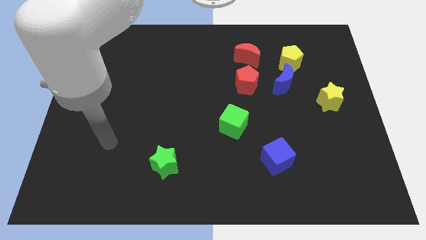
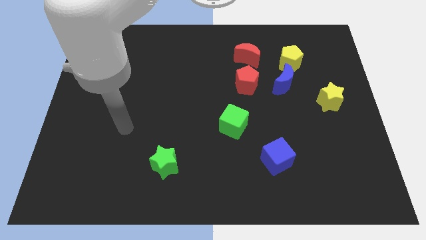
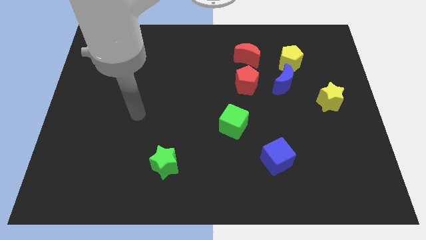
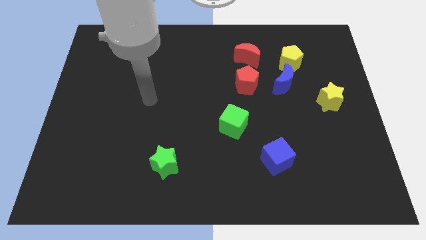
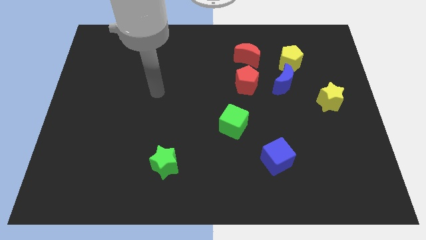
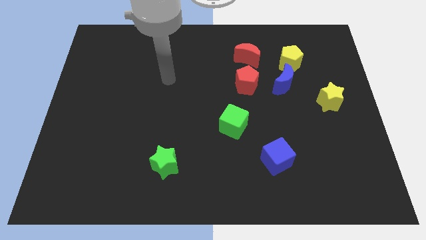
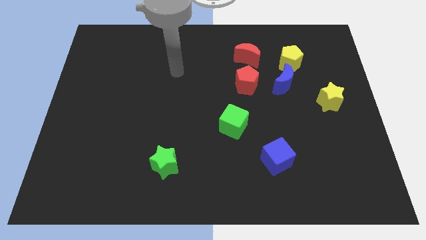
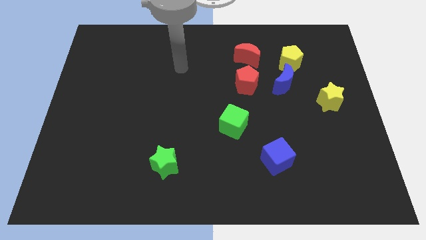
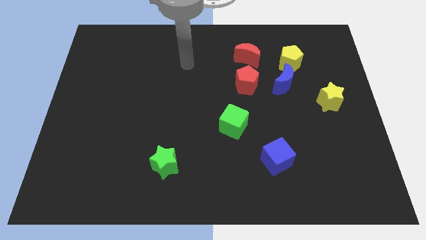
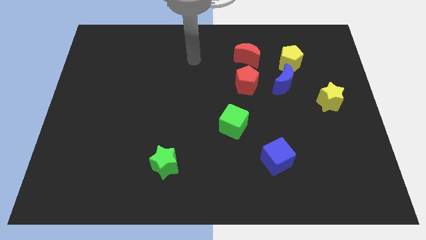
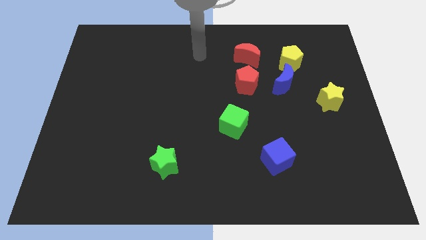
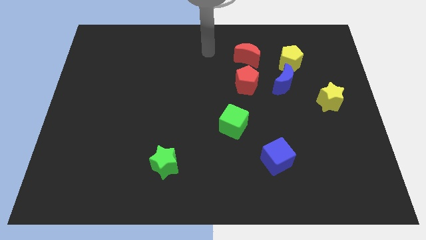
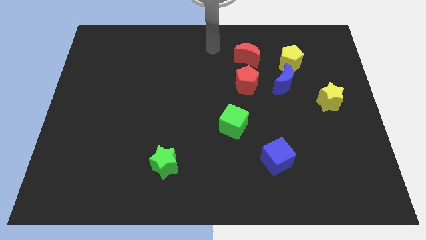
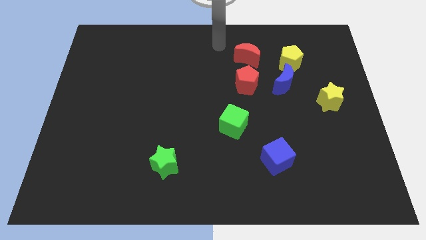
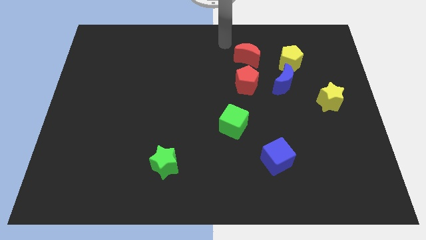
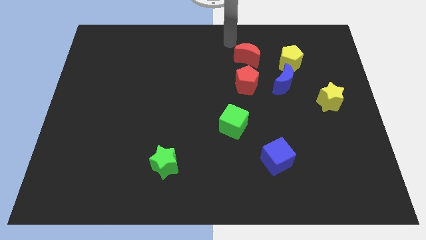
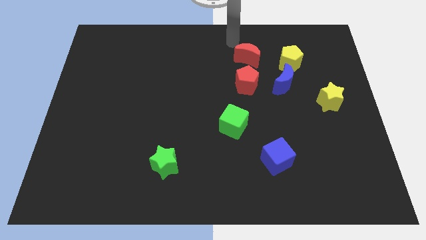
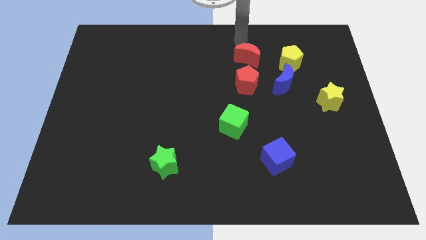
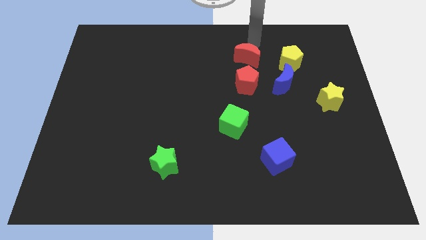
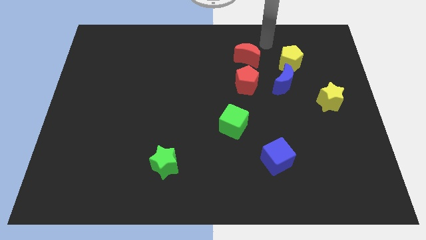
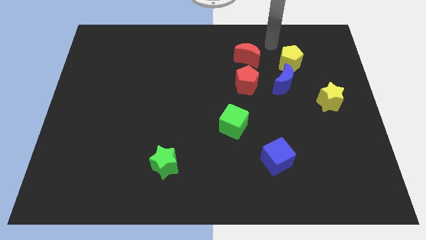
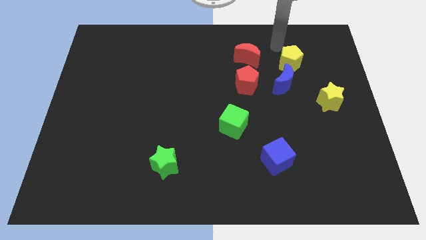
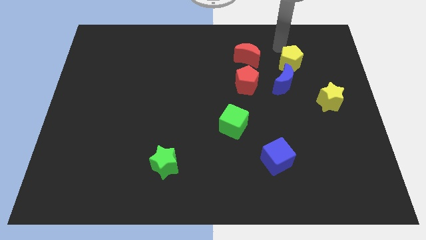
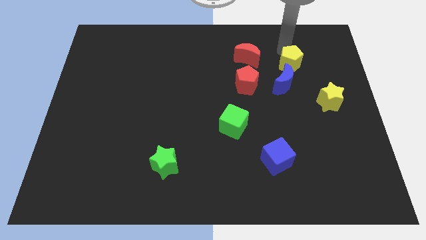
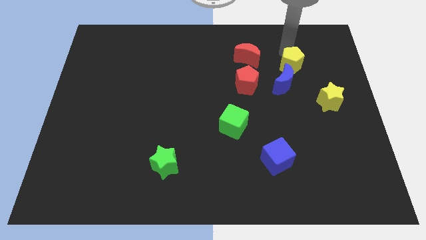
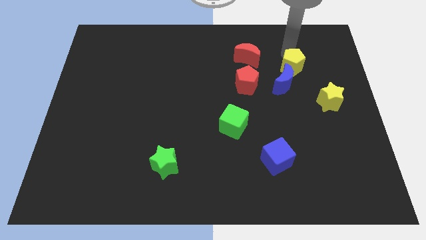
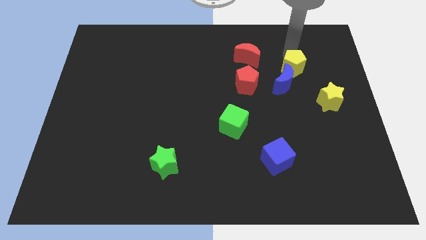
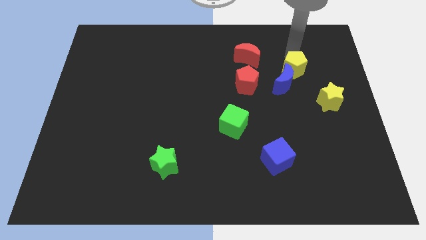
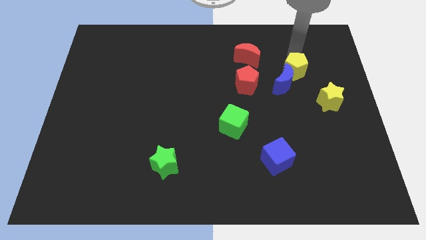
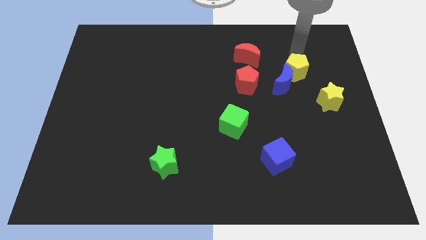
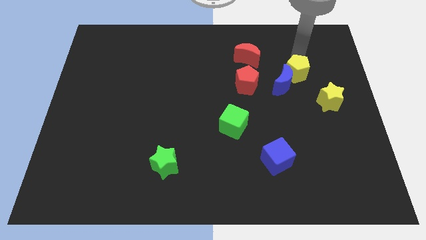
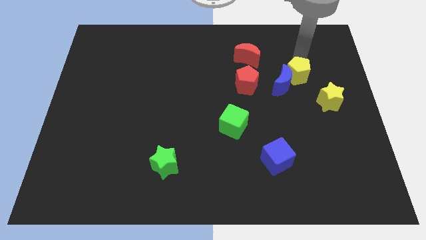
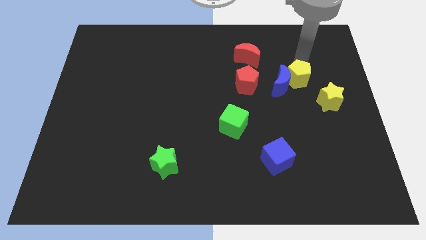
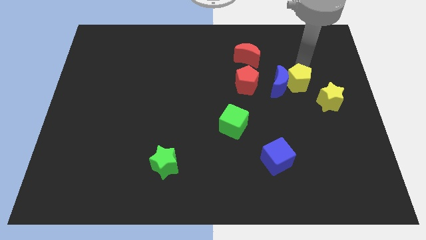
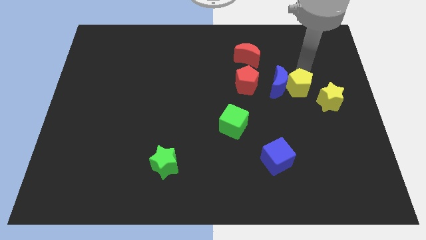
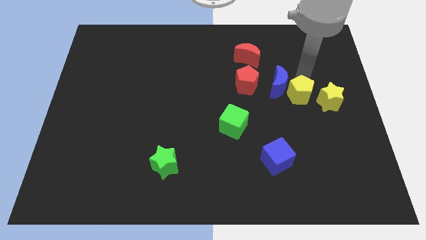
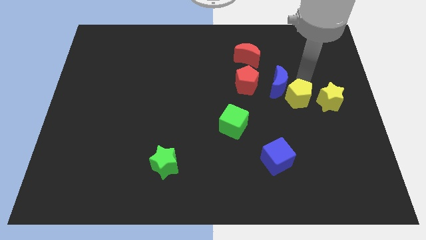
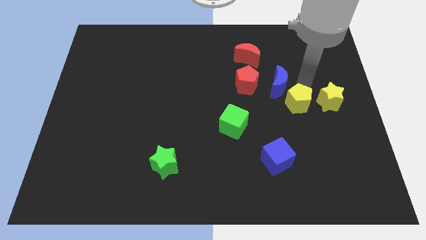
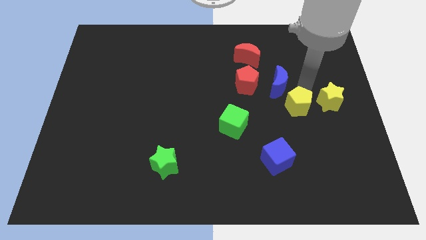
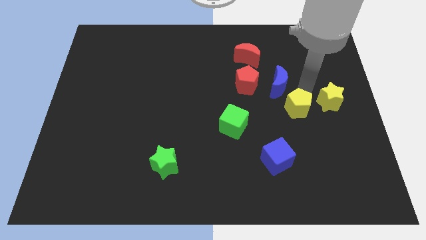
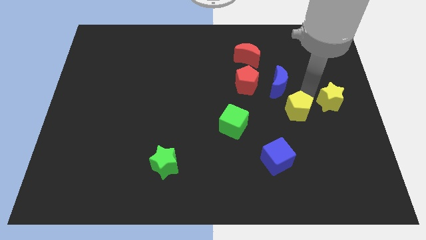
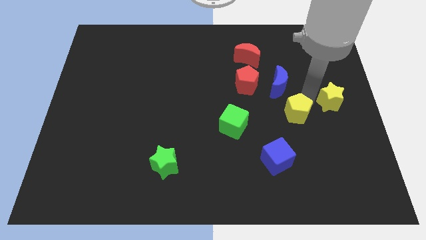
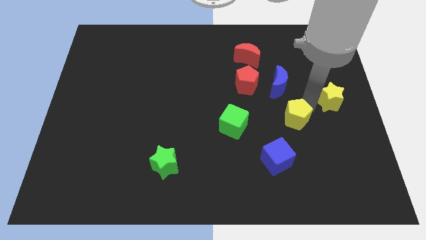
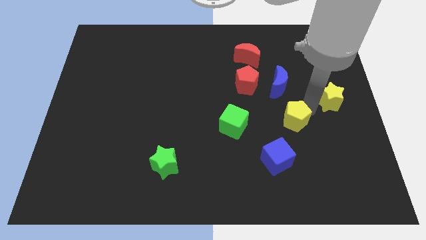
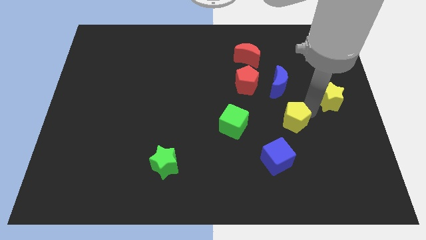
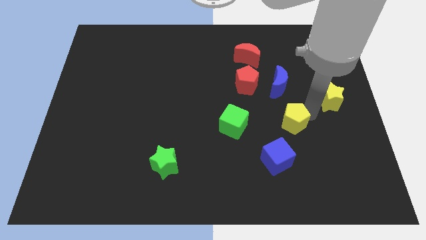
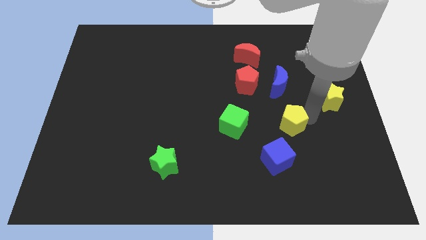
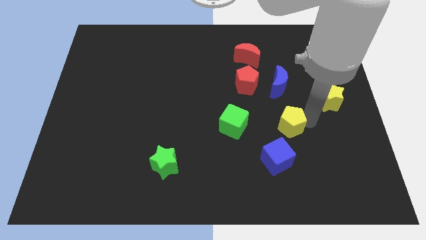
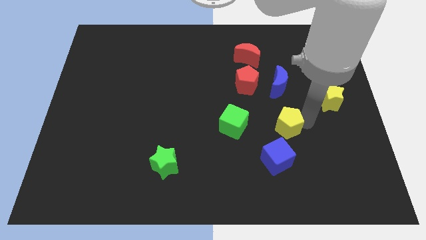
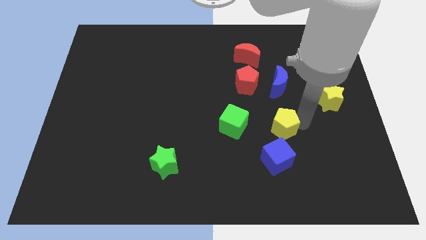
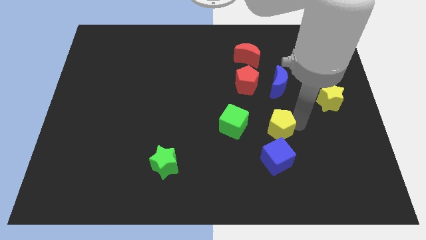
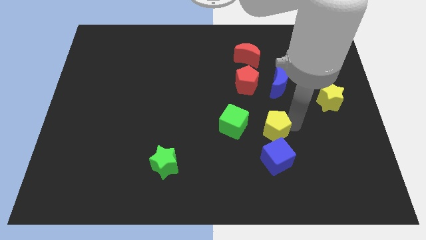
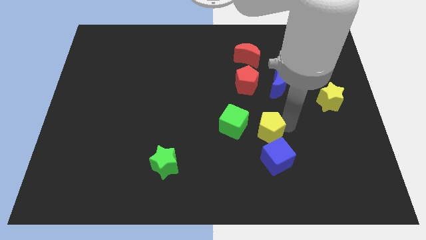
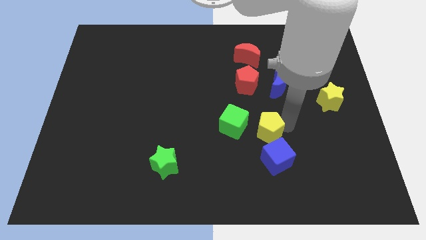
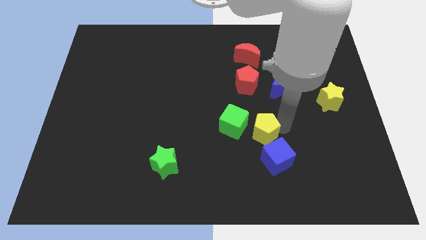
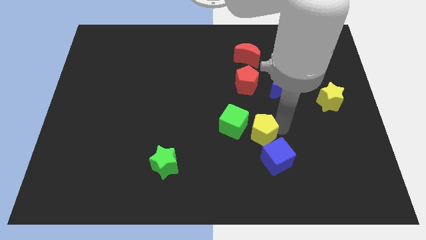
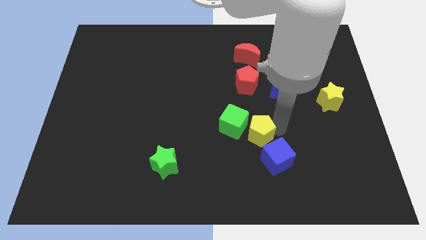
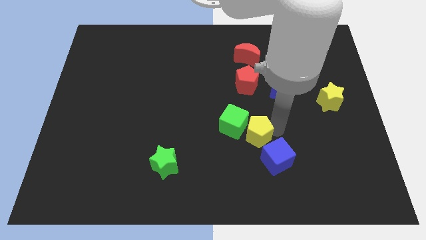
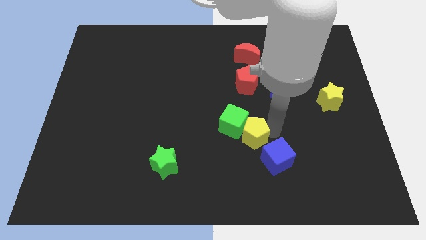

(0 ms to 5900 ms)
move the yellow pentagon towards the green cube

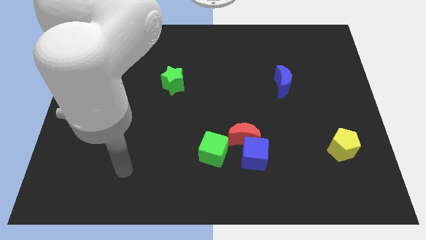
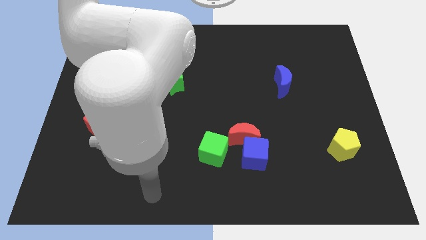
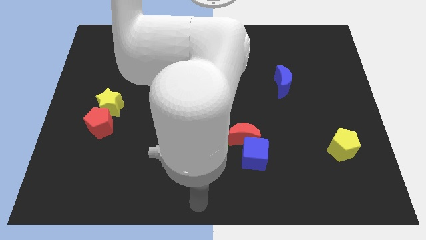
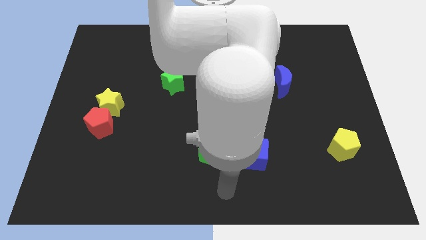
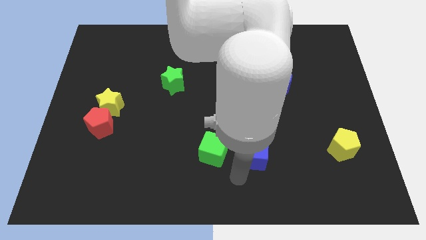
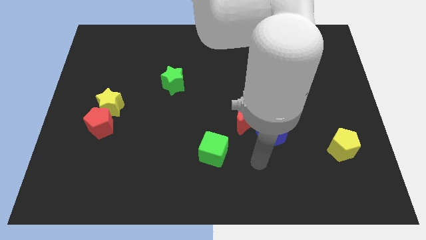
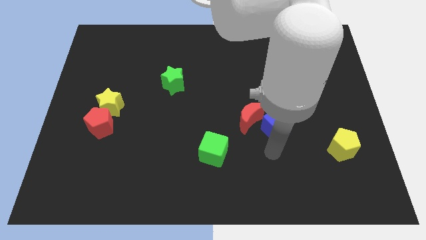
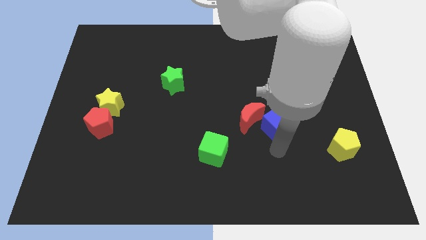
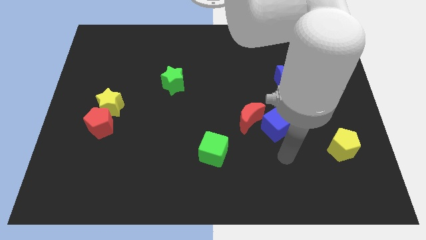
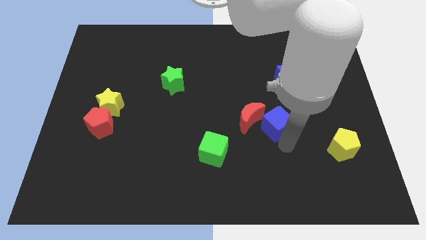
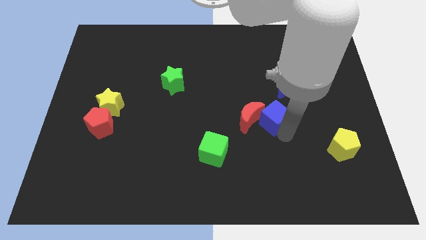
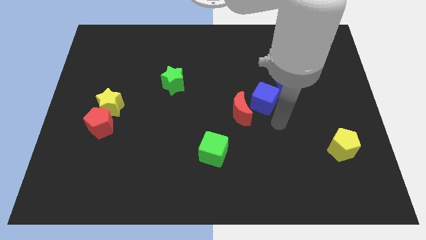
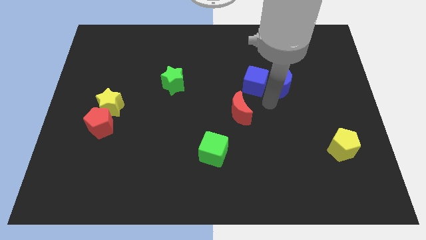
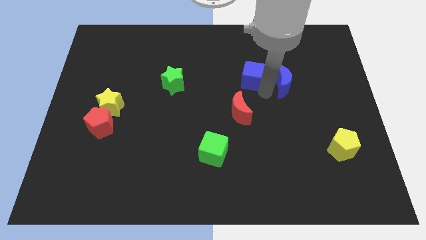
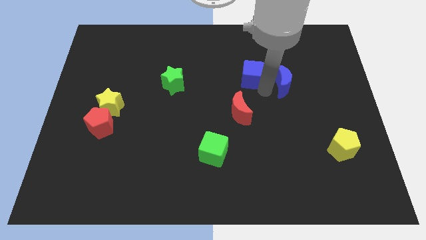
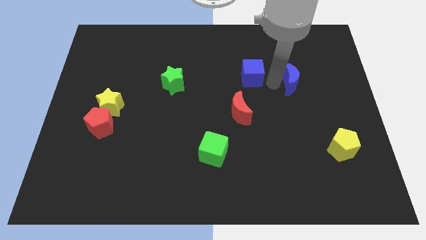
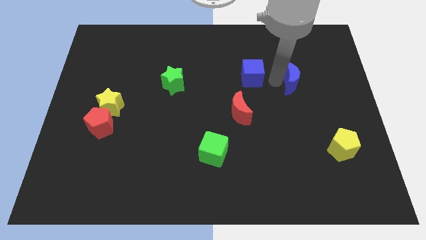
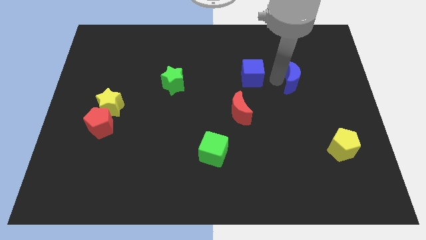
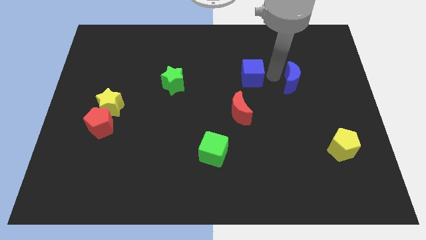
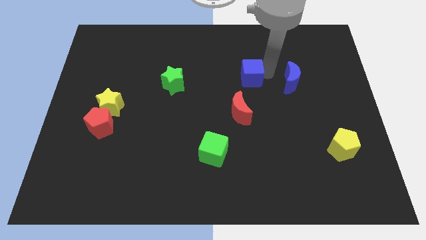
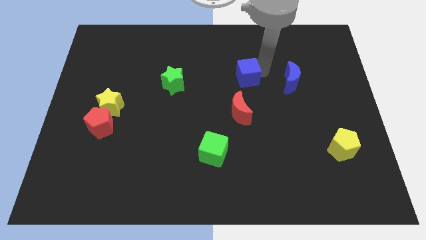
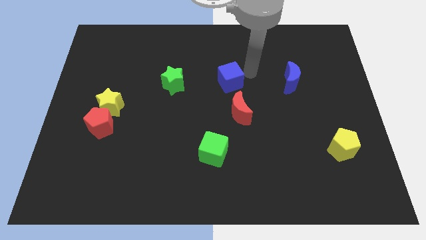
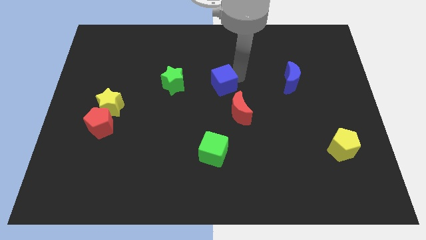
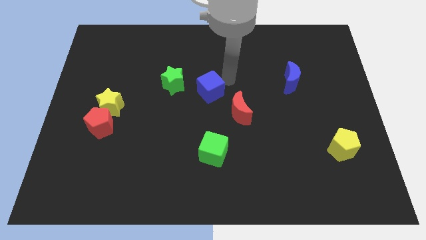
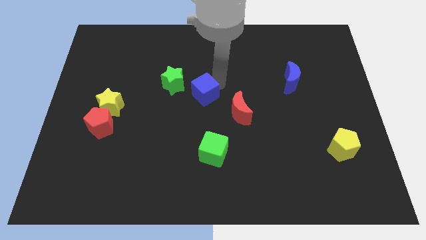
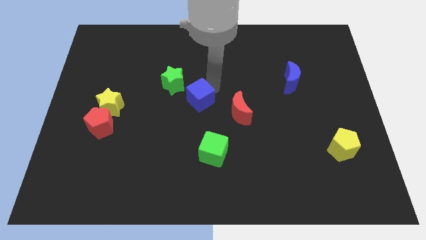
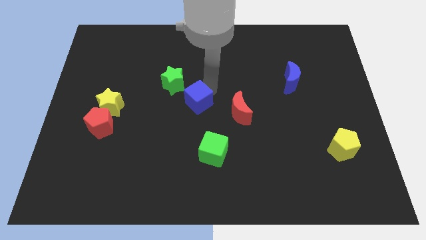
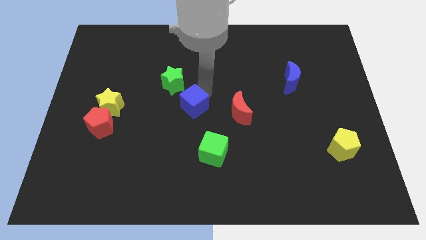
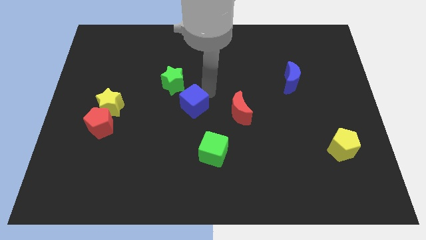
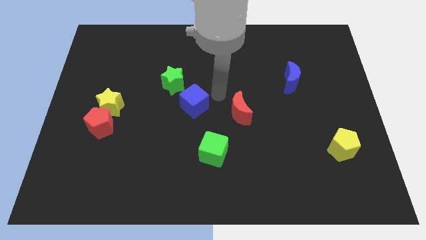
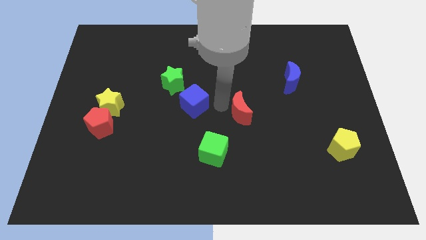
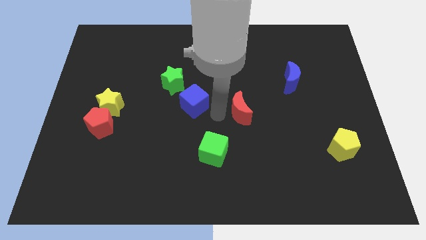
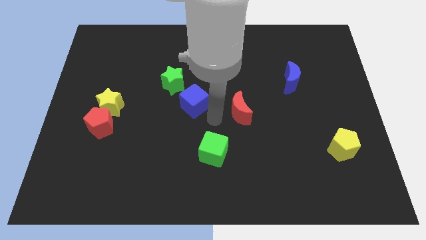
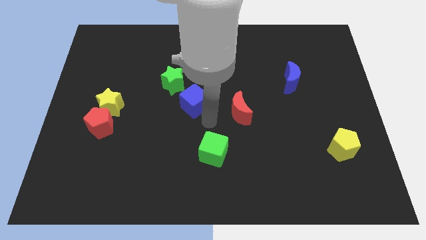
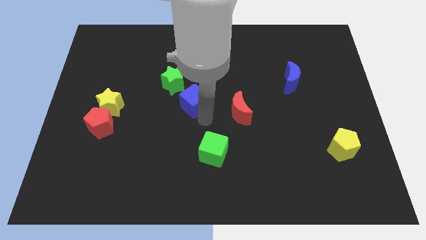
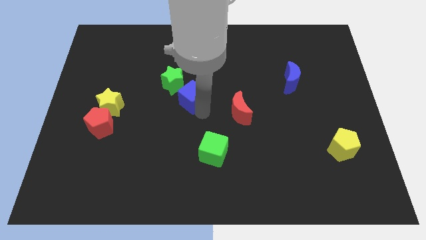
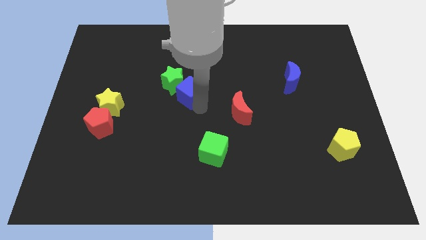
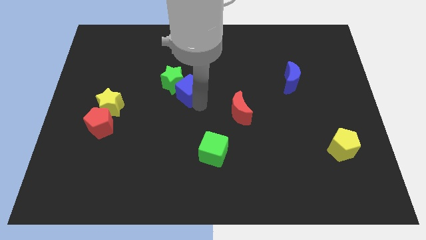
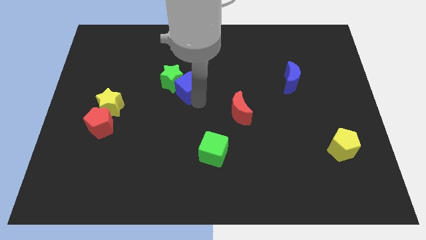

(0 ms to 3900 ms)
slide the blue cube to the green star
